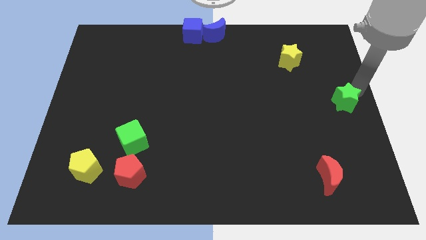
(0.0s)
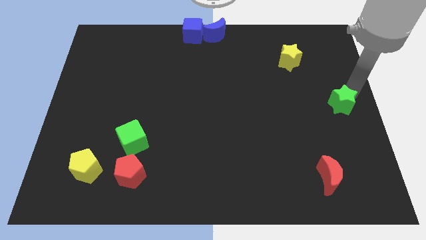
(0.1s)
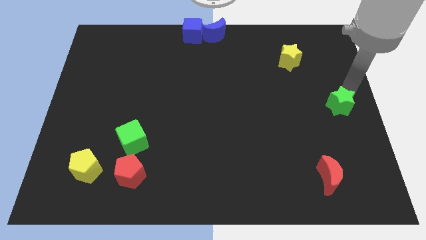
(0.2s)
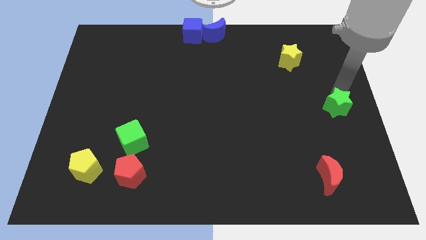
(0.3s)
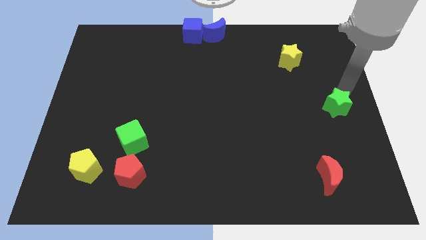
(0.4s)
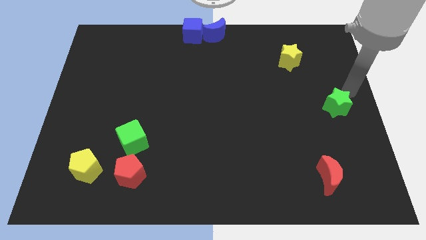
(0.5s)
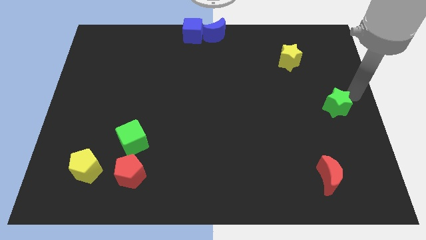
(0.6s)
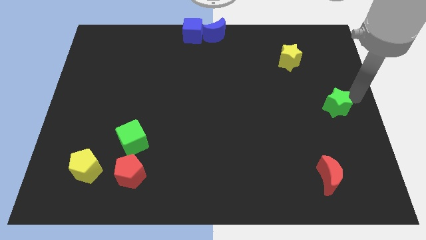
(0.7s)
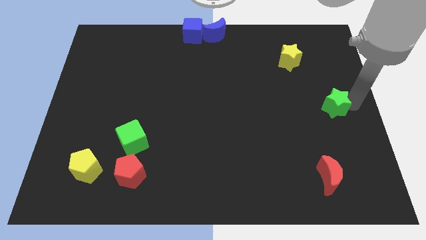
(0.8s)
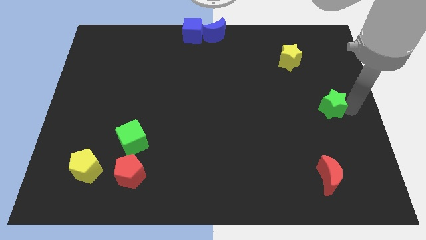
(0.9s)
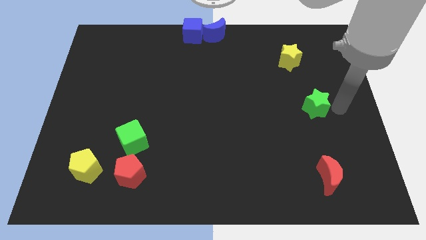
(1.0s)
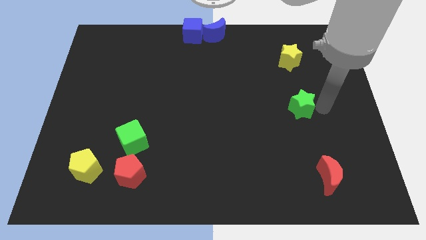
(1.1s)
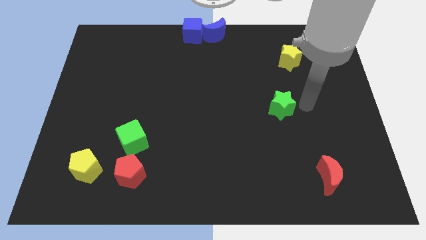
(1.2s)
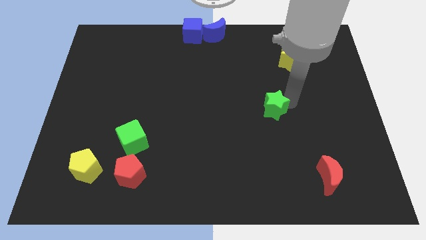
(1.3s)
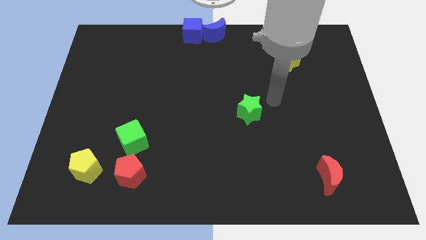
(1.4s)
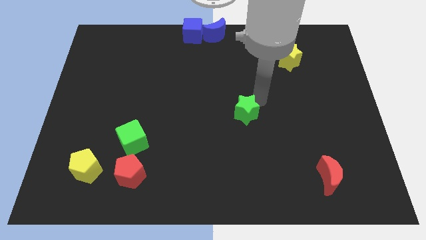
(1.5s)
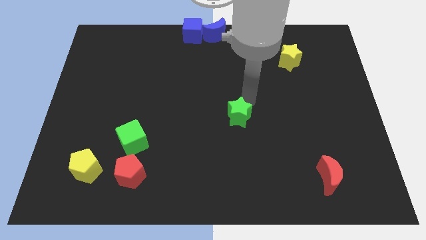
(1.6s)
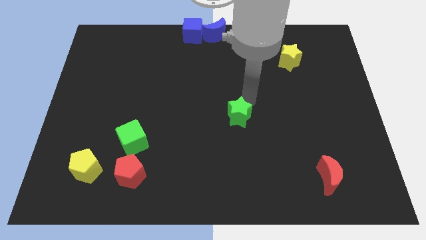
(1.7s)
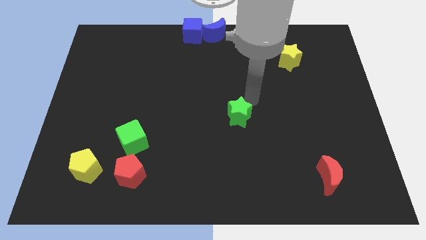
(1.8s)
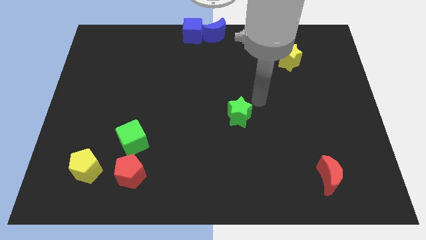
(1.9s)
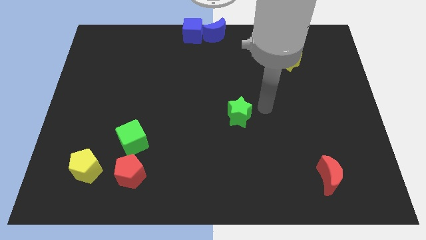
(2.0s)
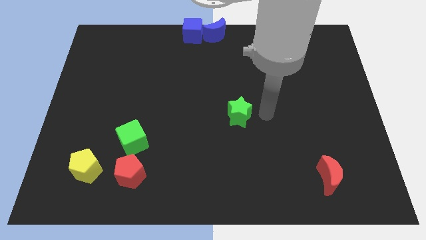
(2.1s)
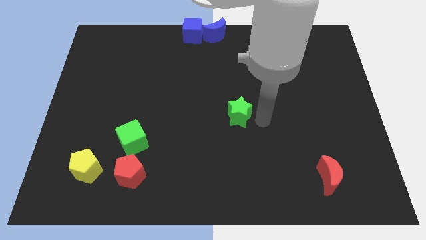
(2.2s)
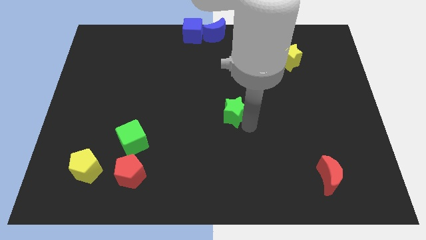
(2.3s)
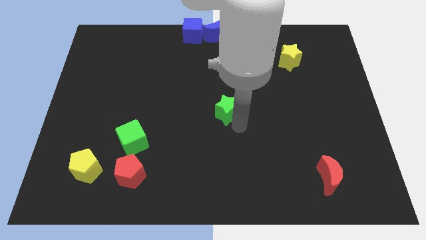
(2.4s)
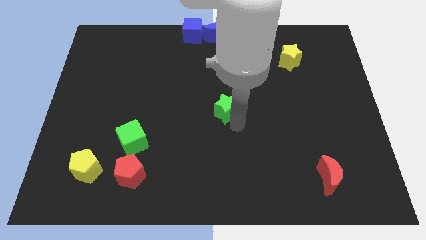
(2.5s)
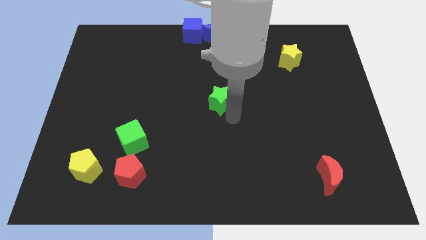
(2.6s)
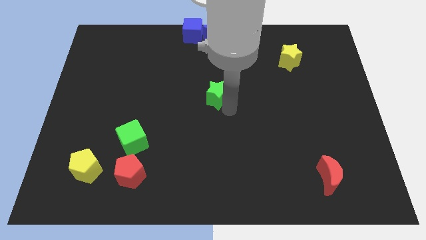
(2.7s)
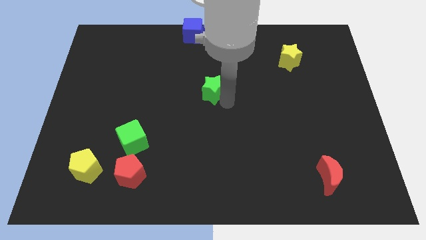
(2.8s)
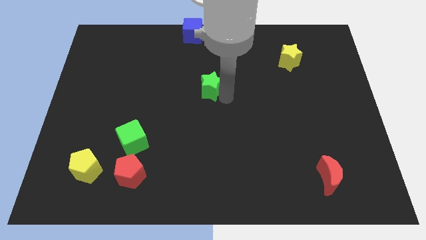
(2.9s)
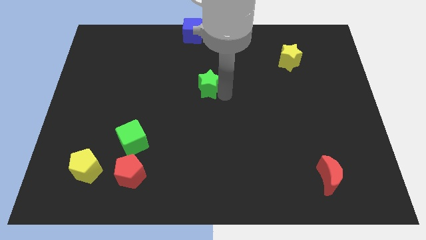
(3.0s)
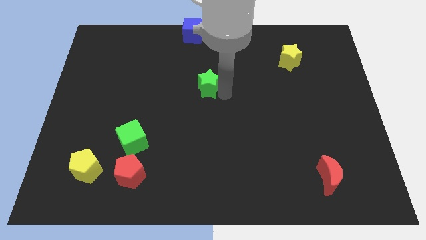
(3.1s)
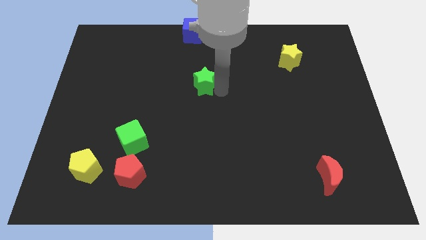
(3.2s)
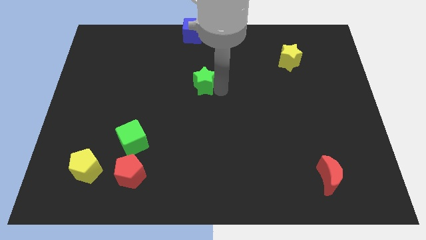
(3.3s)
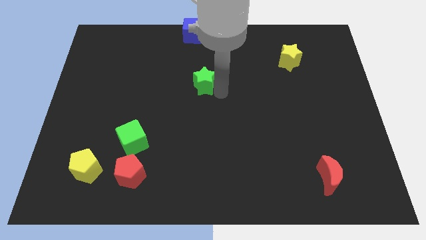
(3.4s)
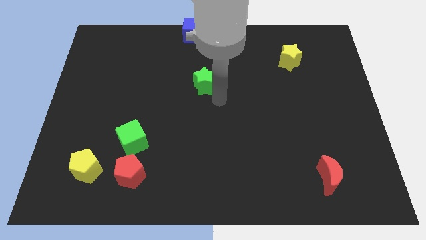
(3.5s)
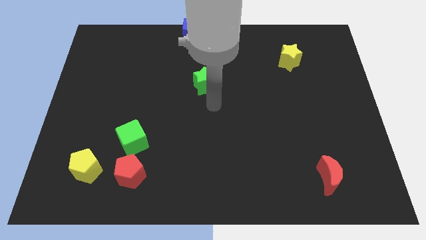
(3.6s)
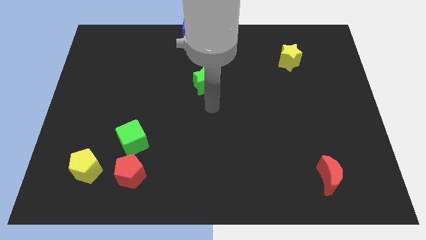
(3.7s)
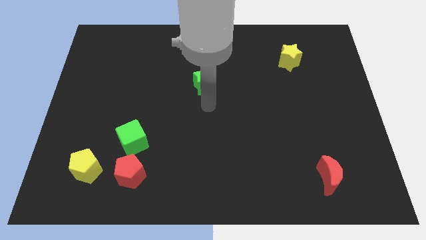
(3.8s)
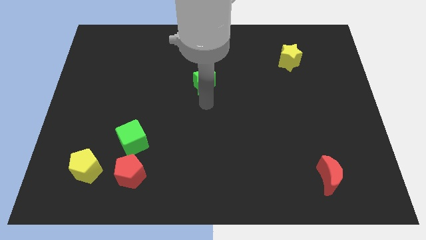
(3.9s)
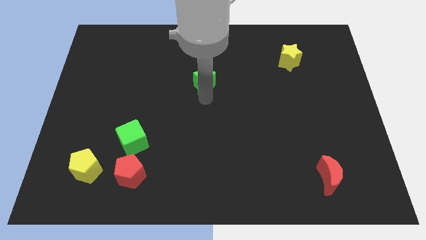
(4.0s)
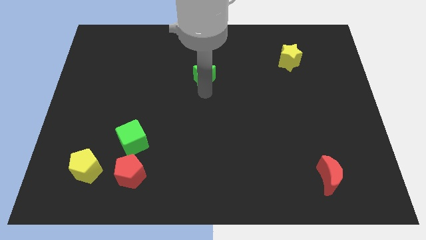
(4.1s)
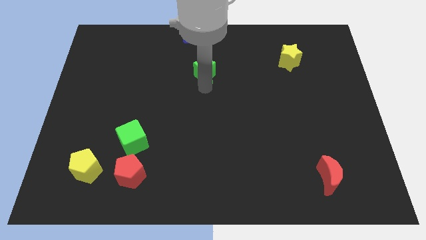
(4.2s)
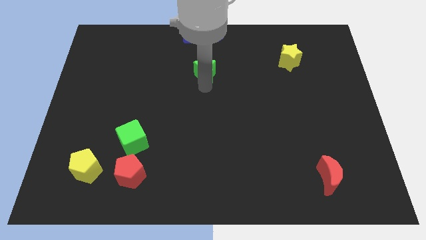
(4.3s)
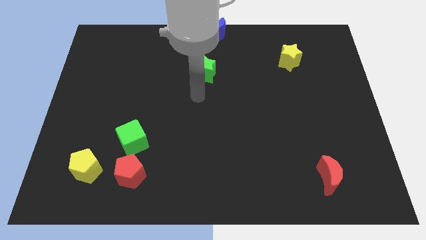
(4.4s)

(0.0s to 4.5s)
drag the green star slightly to the left

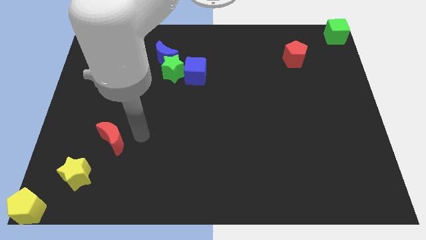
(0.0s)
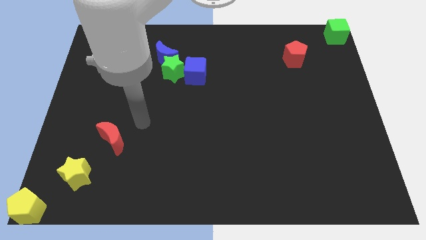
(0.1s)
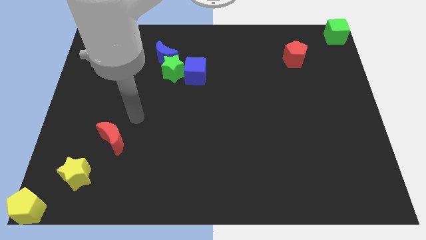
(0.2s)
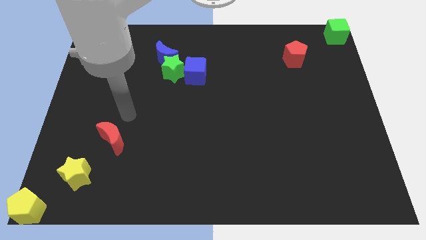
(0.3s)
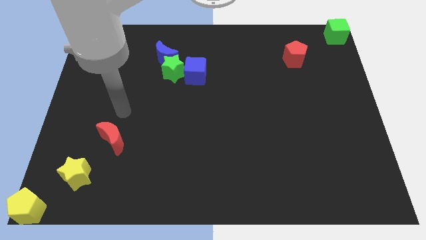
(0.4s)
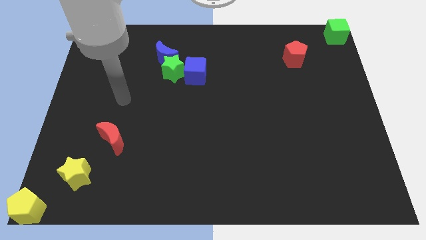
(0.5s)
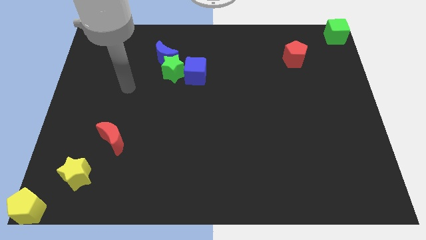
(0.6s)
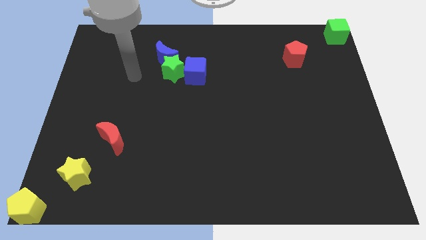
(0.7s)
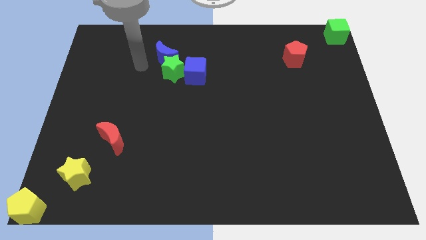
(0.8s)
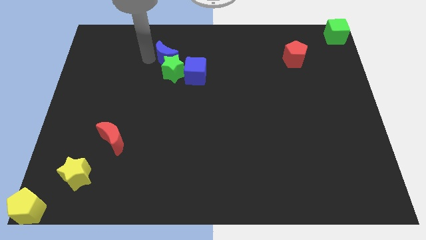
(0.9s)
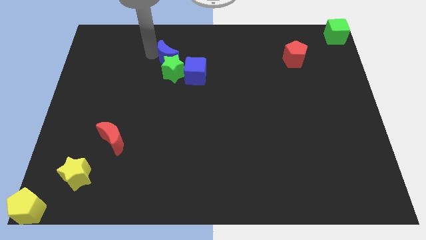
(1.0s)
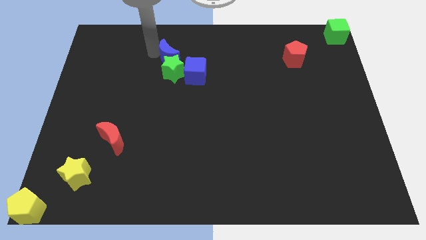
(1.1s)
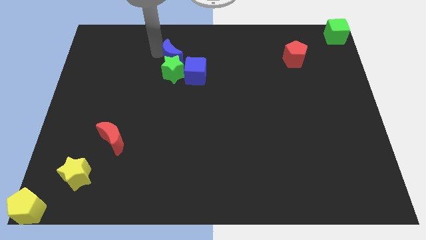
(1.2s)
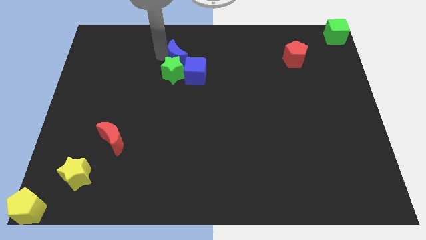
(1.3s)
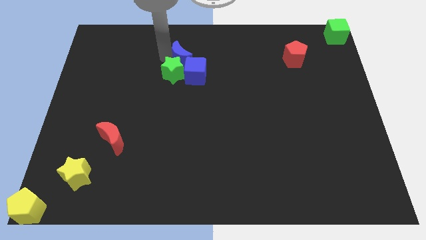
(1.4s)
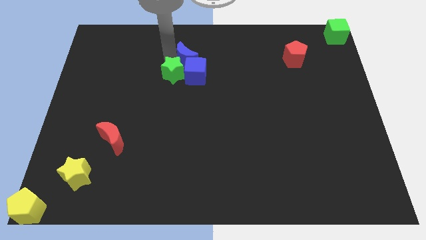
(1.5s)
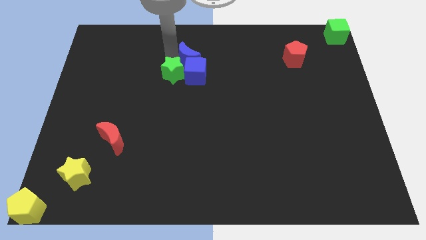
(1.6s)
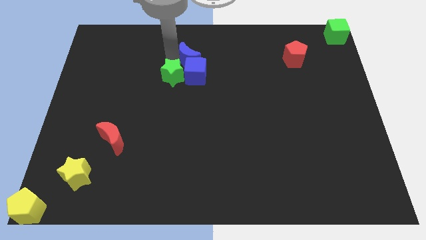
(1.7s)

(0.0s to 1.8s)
place the blue moon above the blue cube

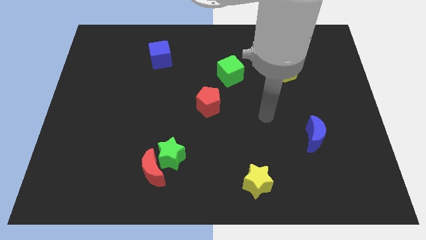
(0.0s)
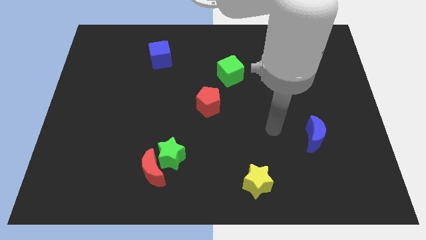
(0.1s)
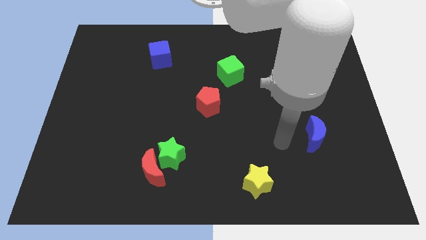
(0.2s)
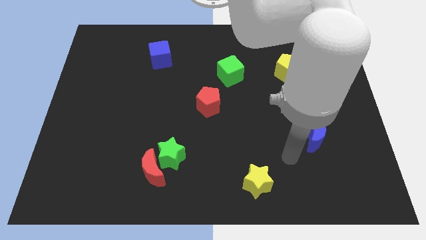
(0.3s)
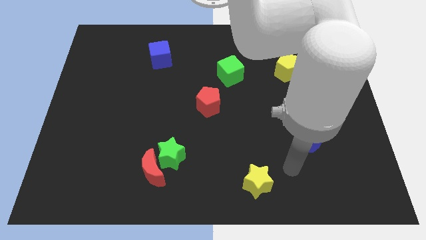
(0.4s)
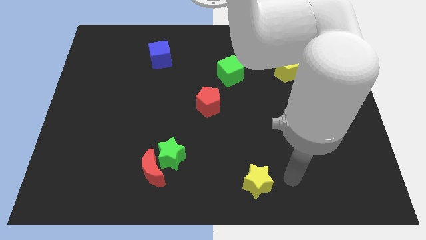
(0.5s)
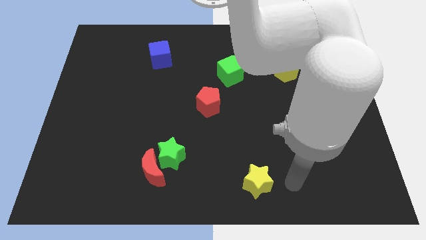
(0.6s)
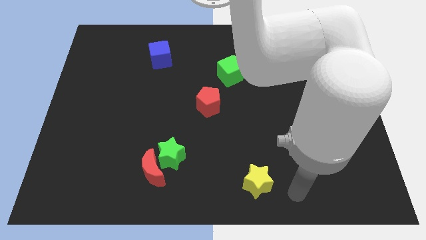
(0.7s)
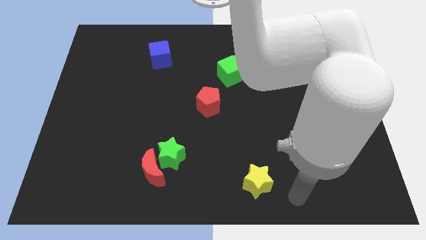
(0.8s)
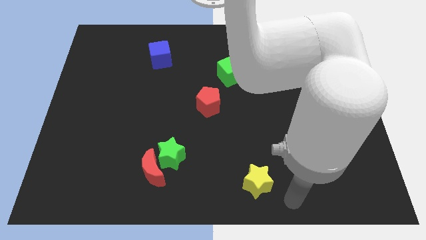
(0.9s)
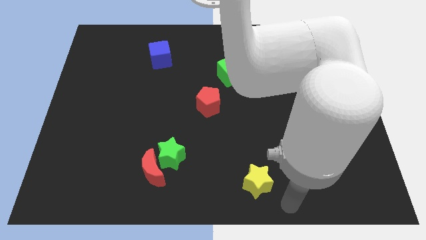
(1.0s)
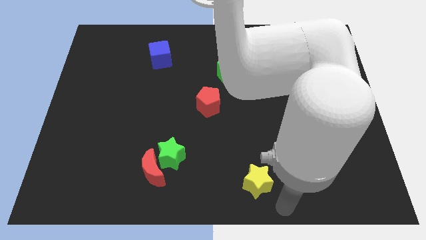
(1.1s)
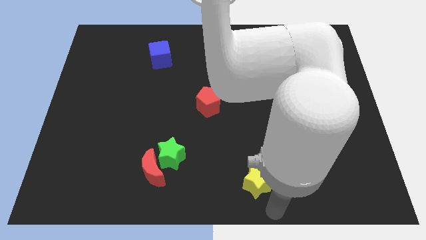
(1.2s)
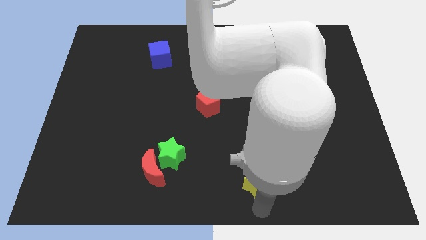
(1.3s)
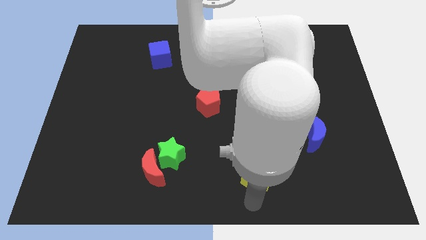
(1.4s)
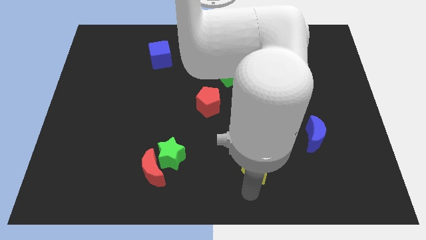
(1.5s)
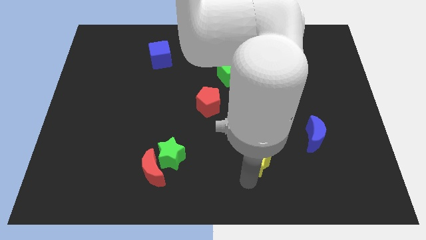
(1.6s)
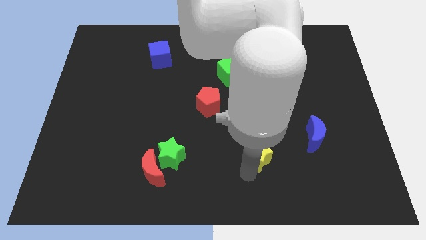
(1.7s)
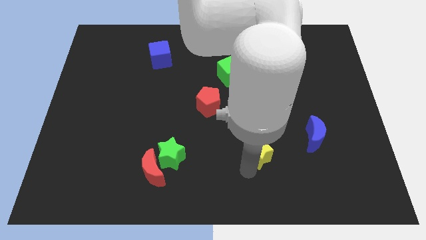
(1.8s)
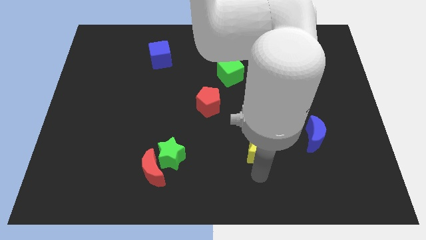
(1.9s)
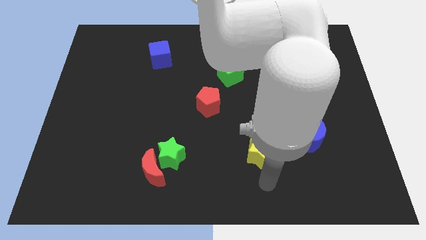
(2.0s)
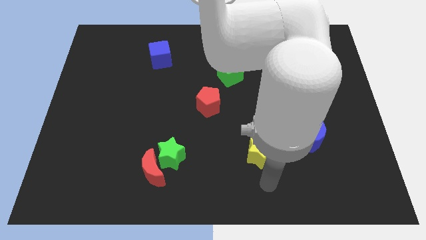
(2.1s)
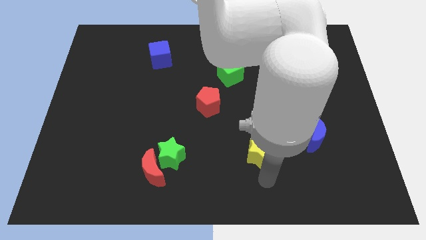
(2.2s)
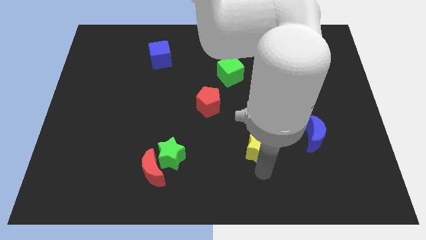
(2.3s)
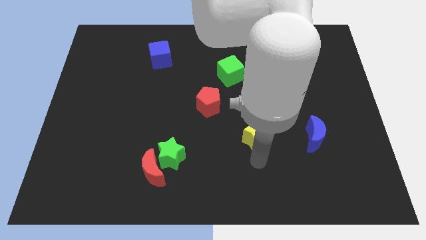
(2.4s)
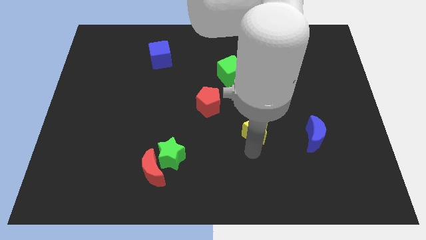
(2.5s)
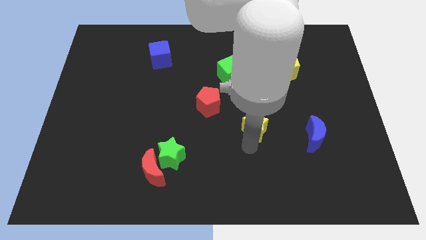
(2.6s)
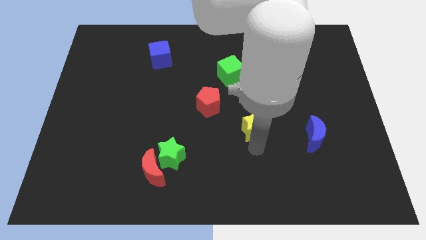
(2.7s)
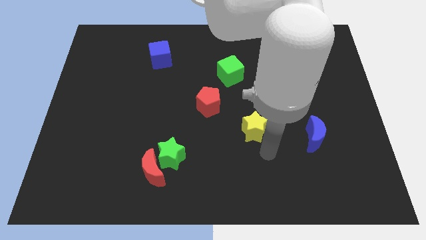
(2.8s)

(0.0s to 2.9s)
move the yellow star slightly up
